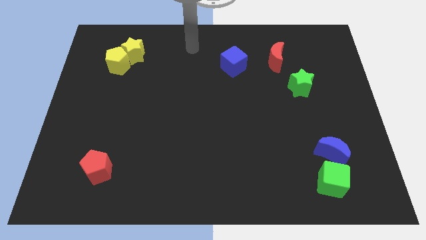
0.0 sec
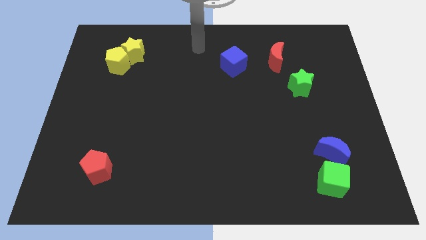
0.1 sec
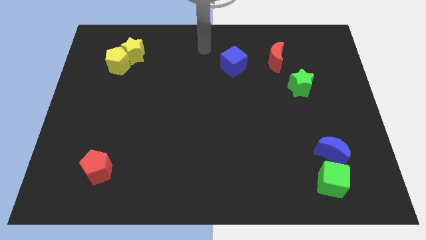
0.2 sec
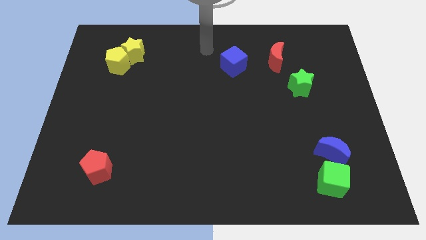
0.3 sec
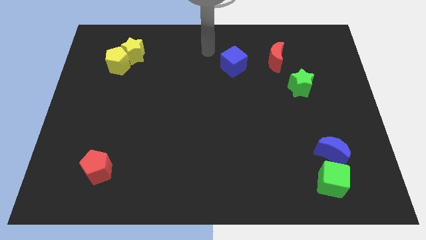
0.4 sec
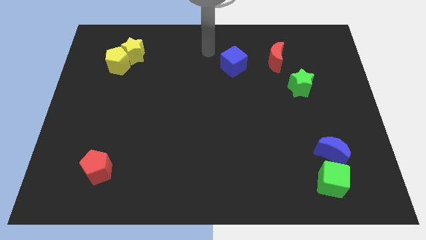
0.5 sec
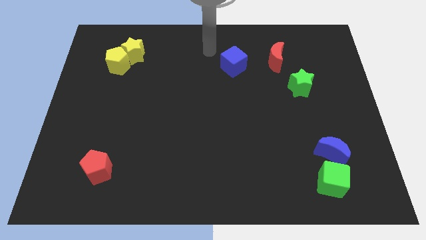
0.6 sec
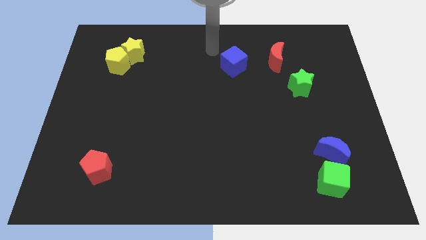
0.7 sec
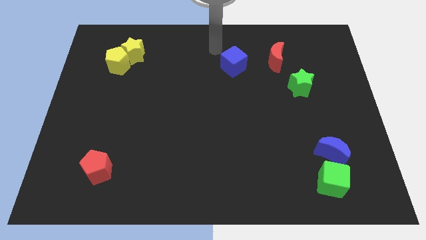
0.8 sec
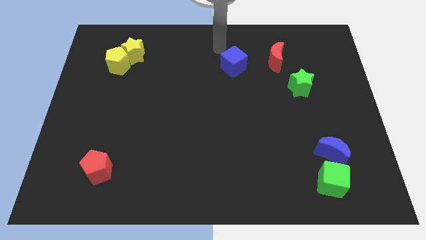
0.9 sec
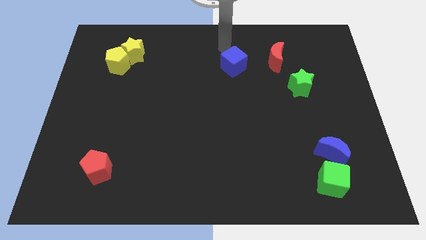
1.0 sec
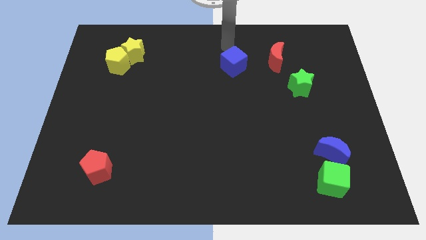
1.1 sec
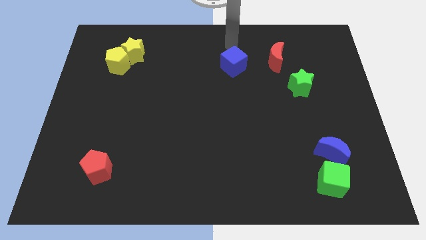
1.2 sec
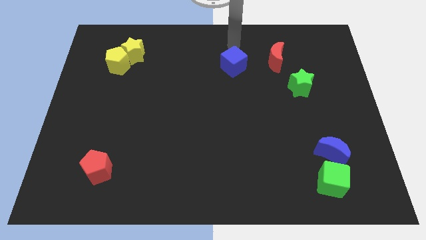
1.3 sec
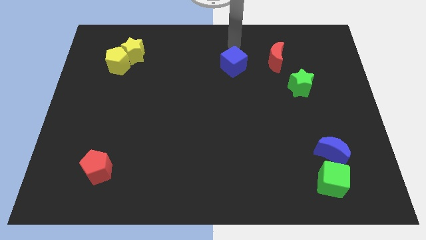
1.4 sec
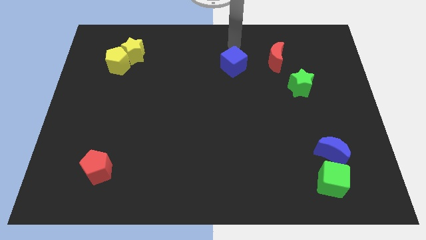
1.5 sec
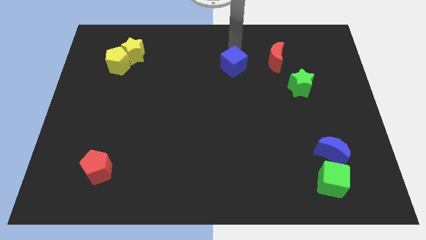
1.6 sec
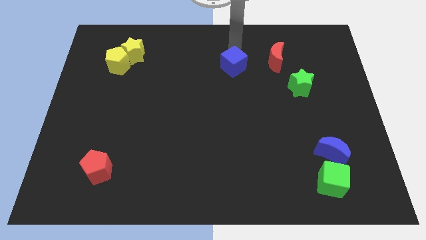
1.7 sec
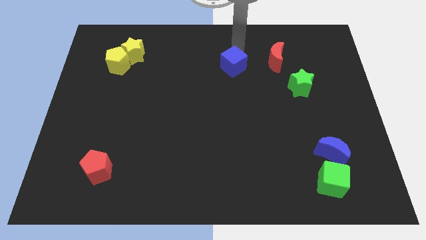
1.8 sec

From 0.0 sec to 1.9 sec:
move the arm towards the blue cube

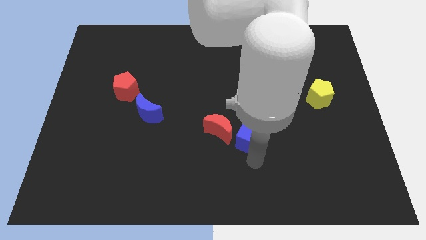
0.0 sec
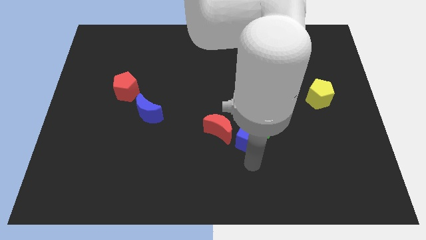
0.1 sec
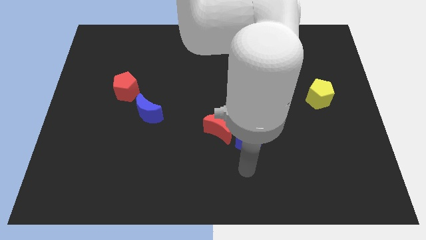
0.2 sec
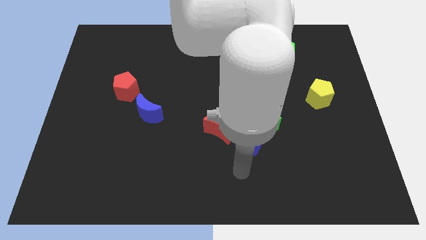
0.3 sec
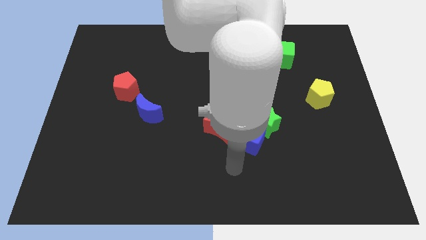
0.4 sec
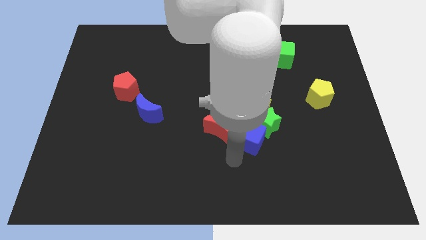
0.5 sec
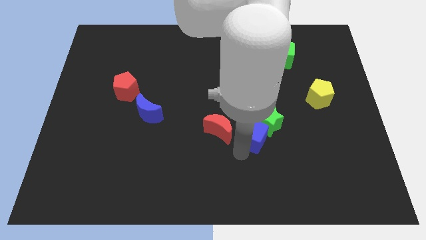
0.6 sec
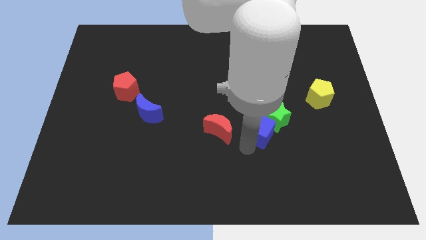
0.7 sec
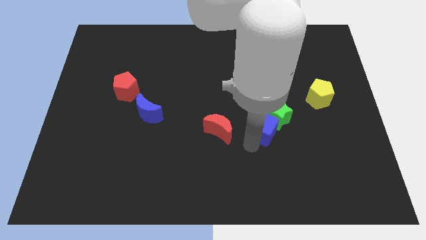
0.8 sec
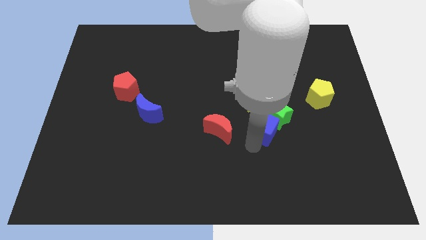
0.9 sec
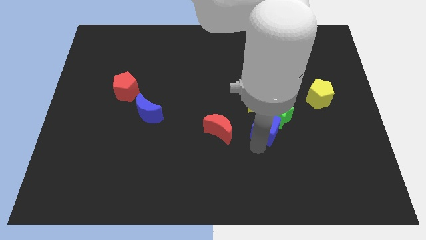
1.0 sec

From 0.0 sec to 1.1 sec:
move blue cube below the green star

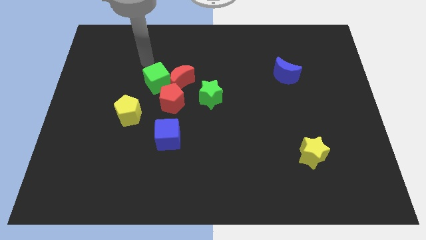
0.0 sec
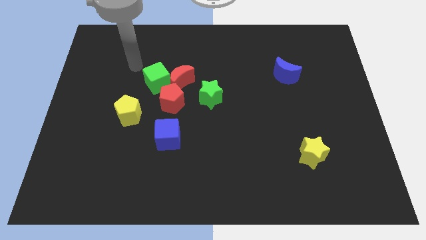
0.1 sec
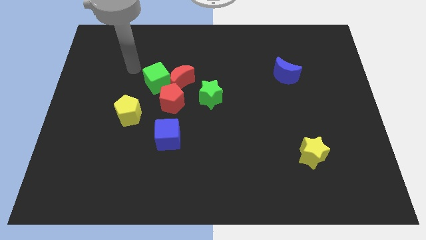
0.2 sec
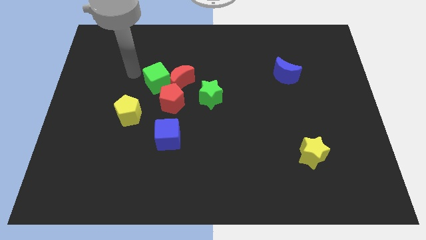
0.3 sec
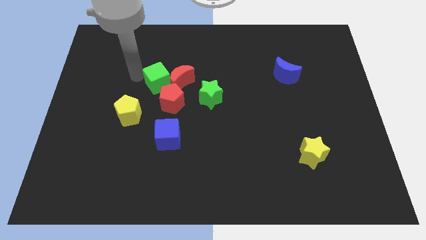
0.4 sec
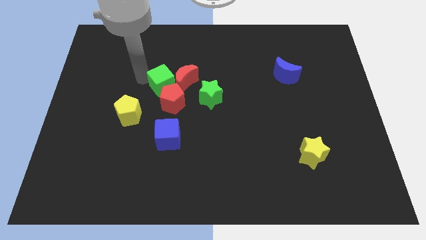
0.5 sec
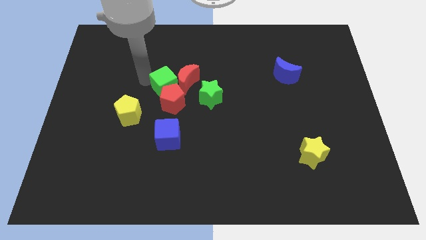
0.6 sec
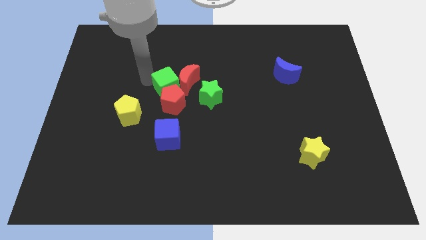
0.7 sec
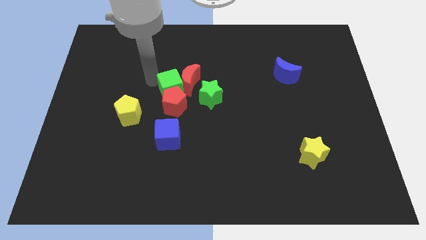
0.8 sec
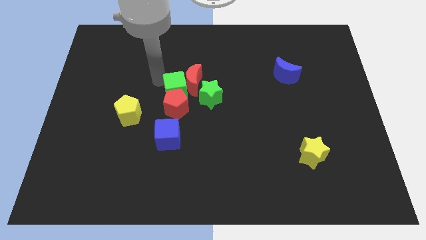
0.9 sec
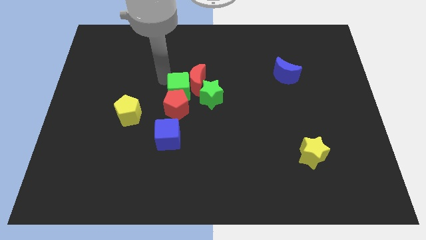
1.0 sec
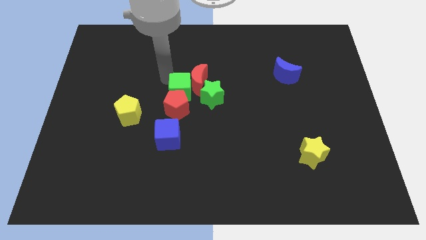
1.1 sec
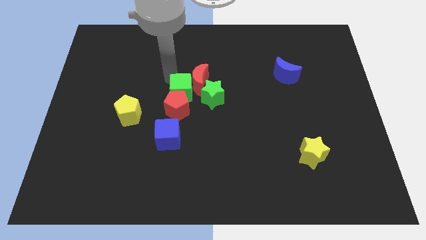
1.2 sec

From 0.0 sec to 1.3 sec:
push the red crescent and red pentagon with the green cube towards the center of the board

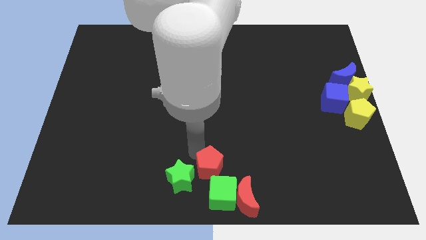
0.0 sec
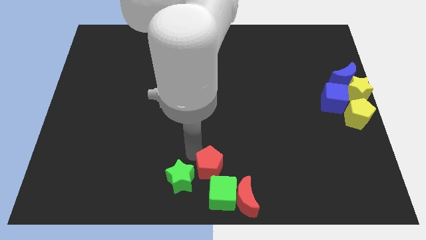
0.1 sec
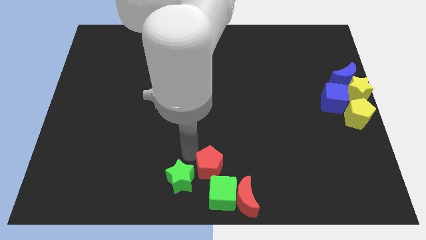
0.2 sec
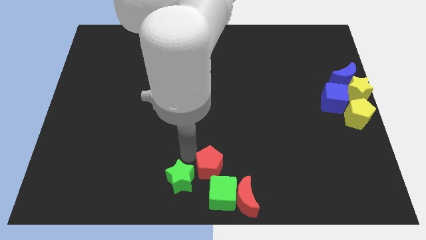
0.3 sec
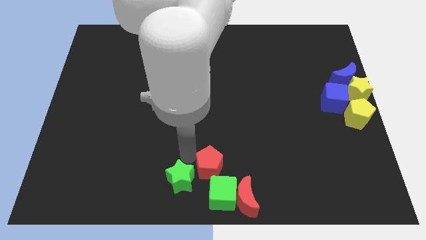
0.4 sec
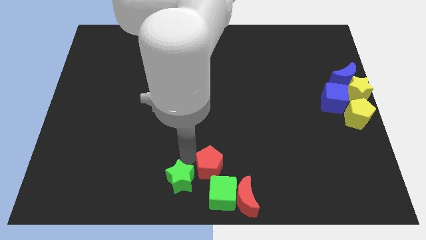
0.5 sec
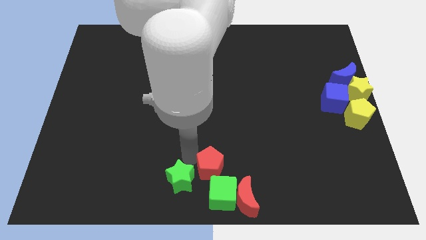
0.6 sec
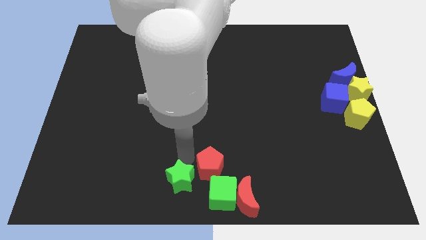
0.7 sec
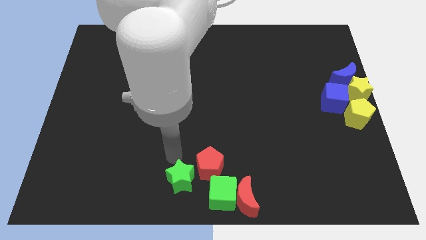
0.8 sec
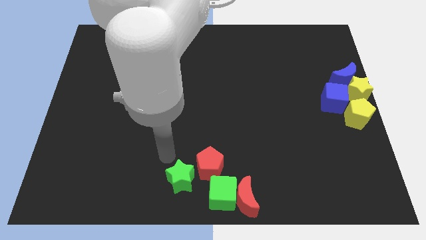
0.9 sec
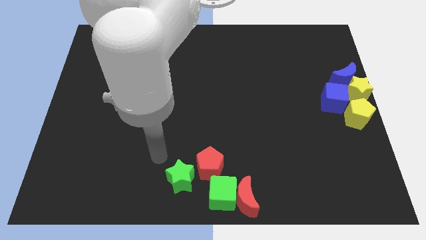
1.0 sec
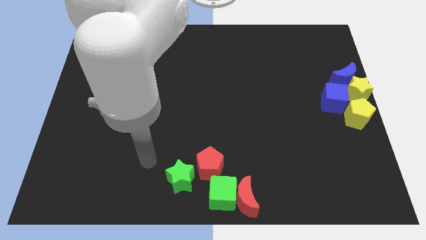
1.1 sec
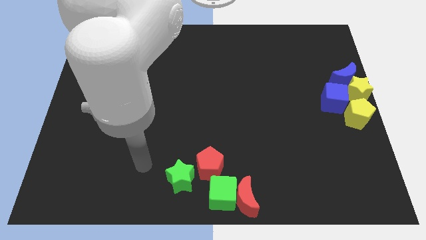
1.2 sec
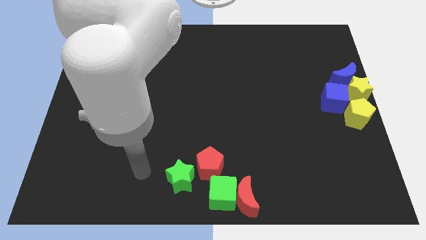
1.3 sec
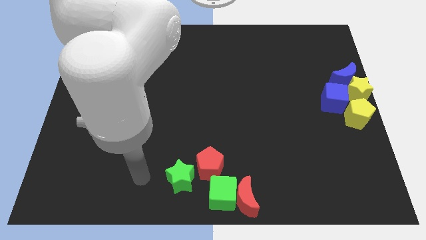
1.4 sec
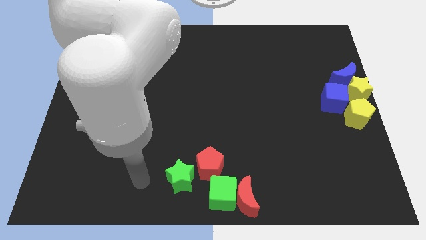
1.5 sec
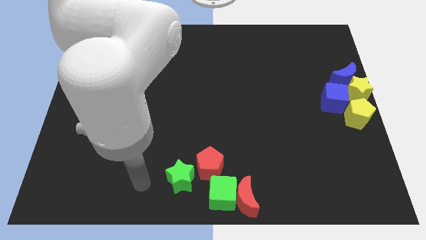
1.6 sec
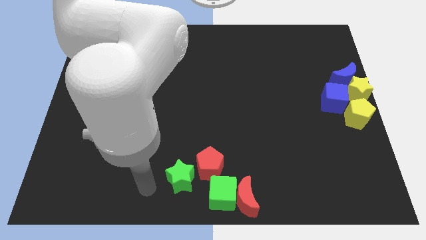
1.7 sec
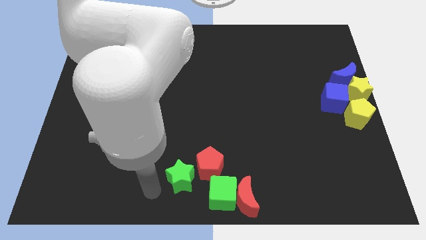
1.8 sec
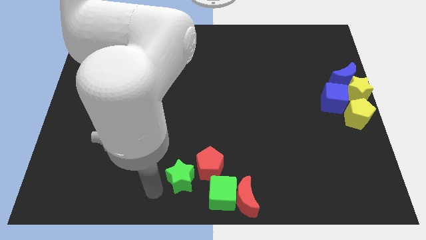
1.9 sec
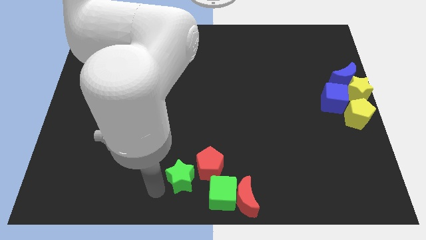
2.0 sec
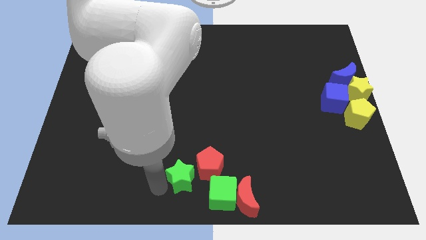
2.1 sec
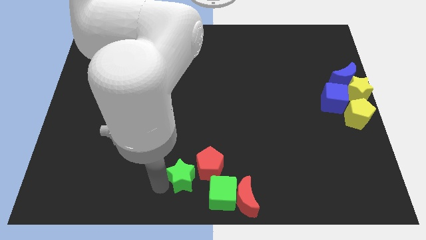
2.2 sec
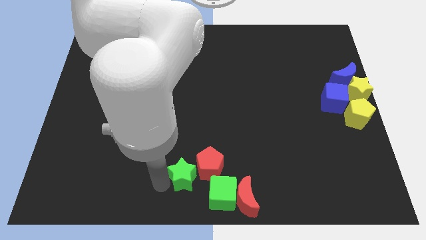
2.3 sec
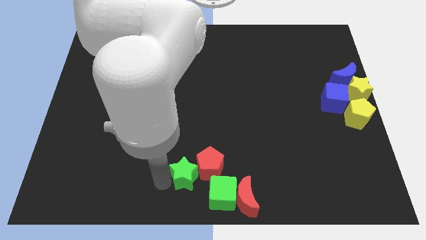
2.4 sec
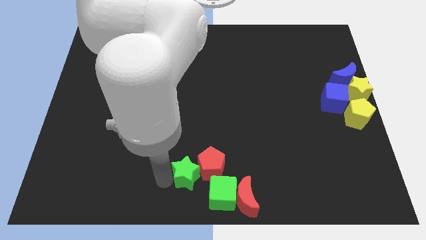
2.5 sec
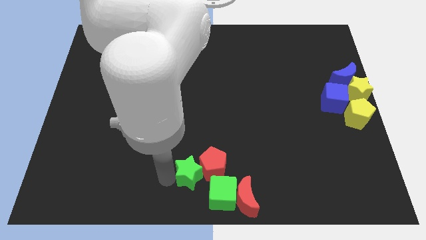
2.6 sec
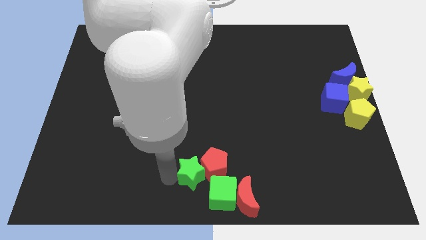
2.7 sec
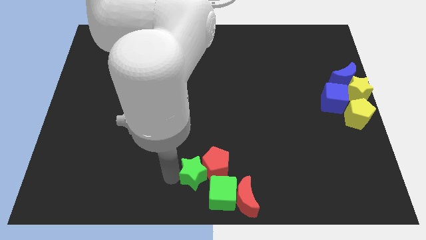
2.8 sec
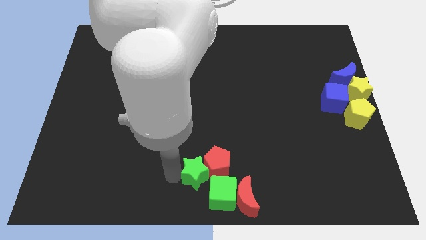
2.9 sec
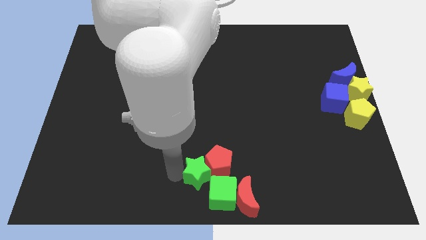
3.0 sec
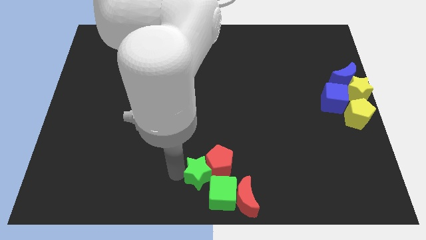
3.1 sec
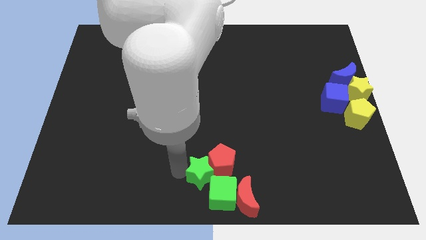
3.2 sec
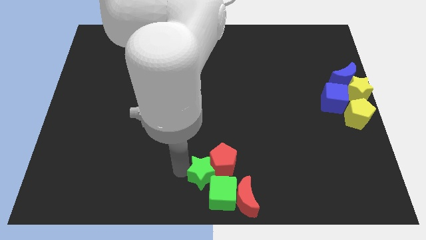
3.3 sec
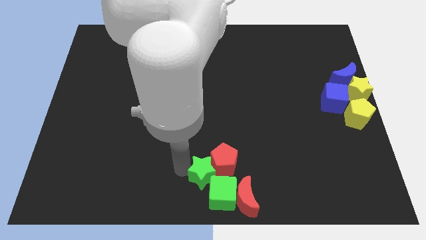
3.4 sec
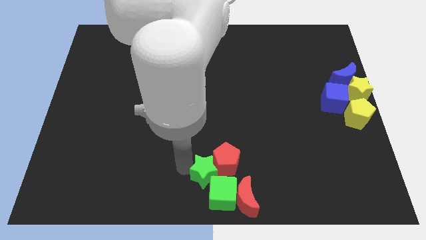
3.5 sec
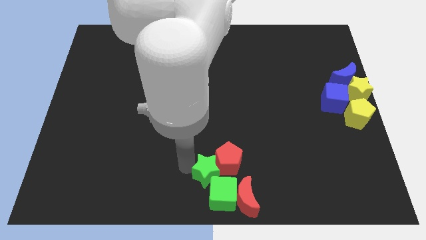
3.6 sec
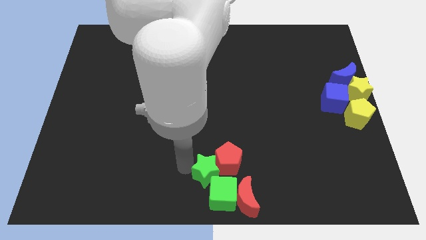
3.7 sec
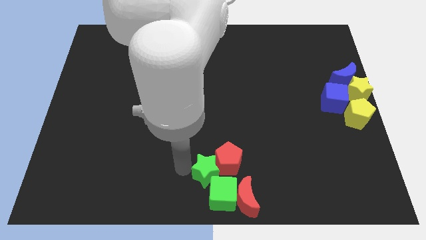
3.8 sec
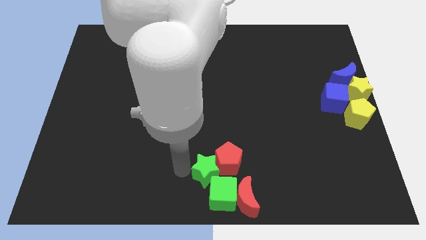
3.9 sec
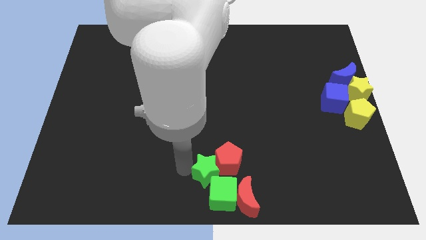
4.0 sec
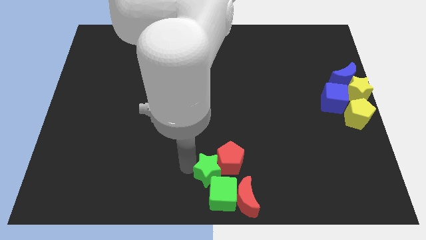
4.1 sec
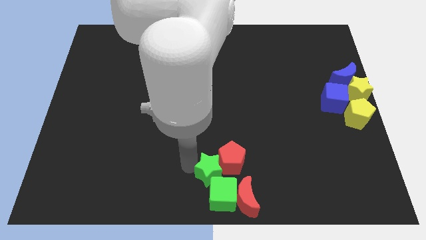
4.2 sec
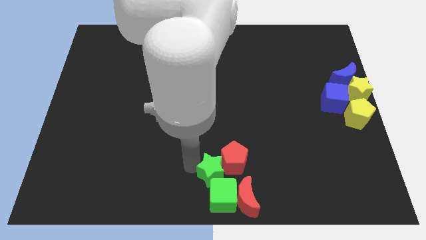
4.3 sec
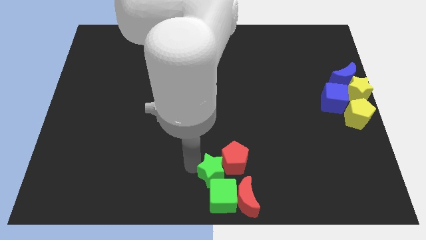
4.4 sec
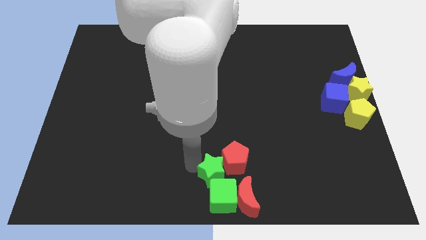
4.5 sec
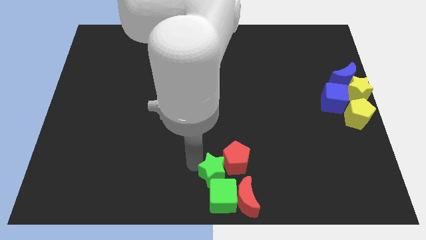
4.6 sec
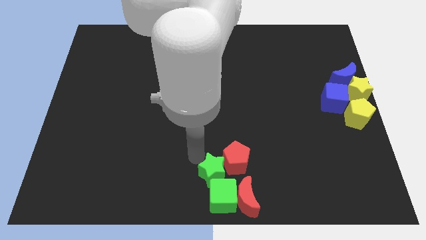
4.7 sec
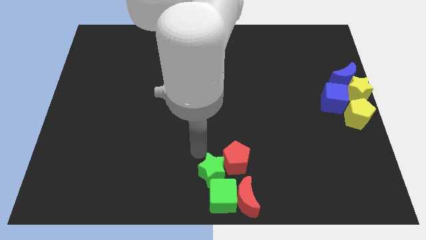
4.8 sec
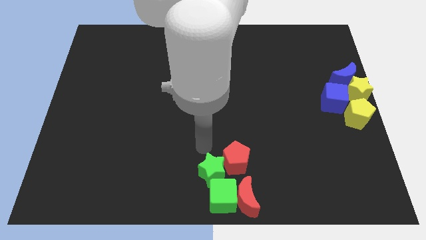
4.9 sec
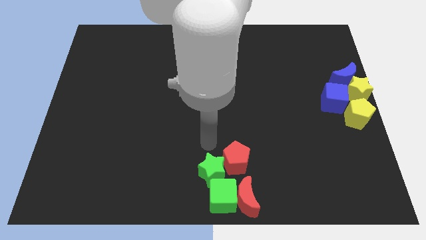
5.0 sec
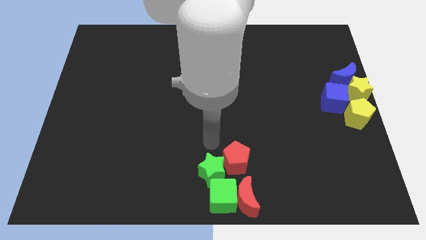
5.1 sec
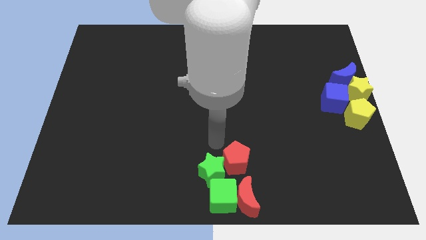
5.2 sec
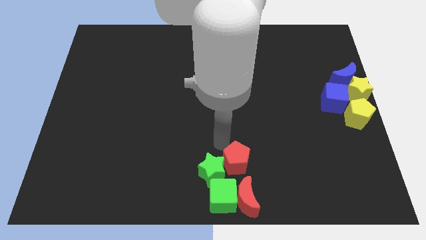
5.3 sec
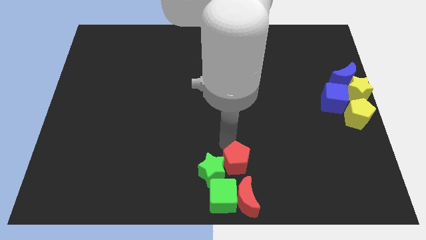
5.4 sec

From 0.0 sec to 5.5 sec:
drag slightly red pentagon with the help of green star to the right side
